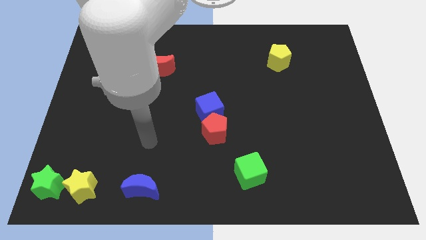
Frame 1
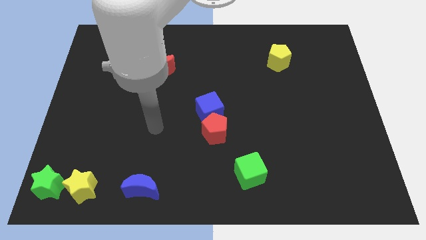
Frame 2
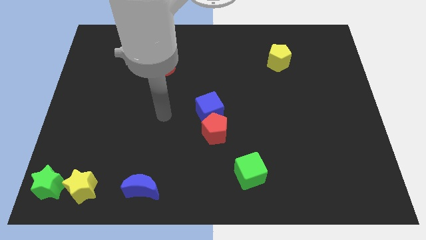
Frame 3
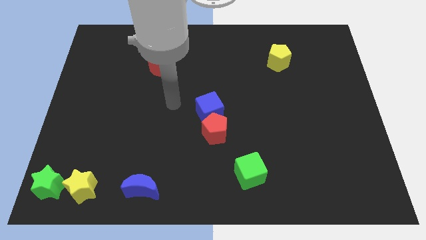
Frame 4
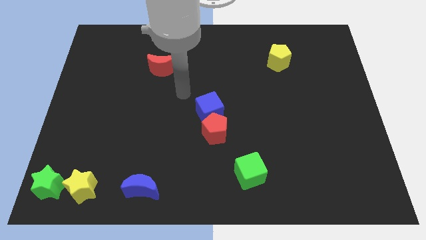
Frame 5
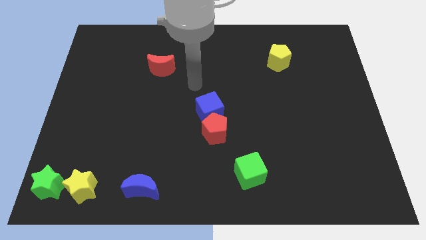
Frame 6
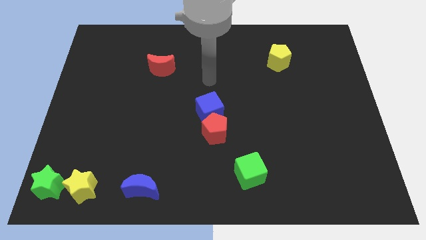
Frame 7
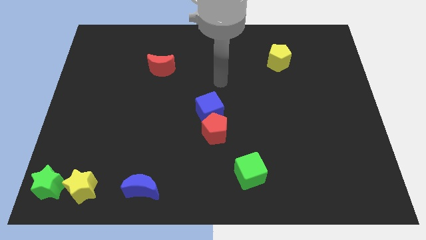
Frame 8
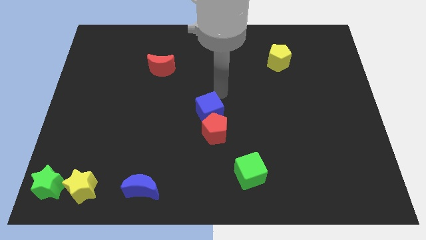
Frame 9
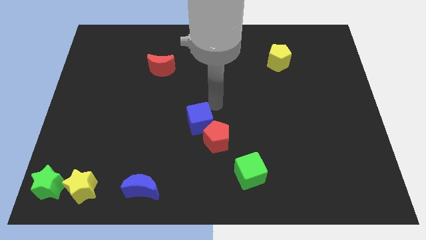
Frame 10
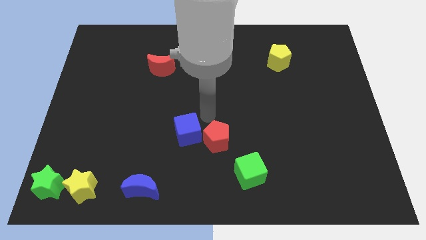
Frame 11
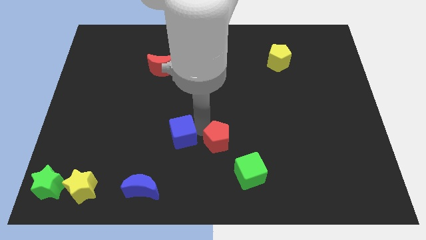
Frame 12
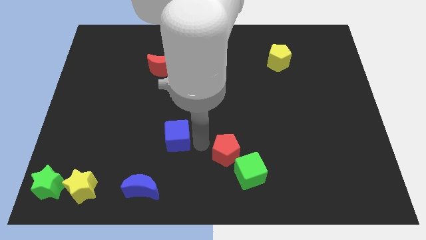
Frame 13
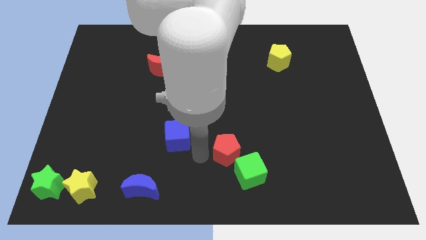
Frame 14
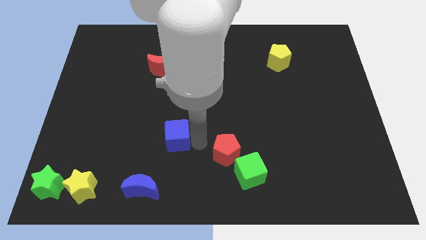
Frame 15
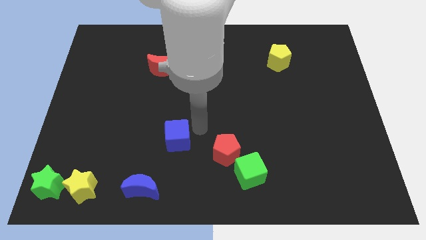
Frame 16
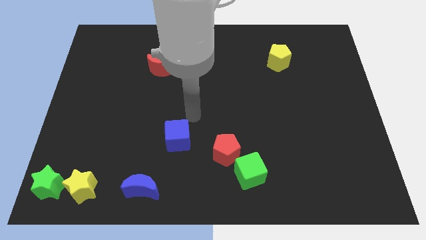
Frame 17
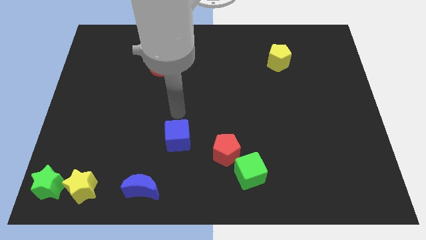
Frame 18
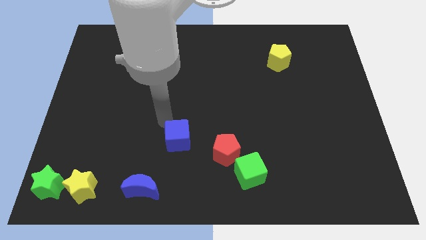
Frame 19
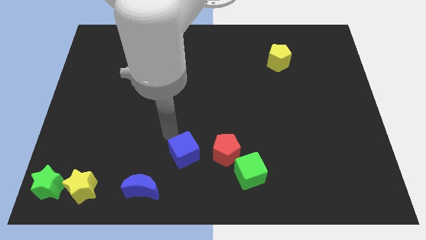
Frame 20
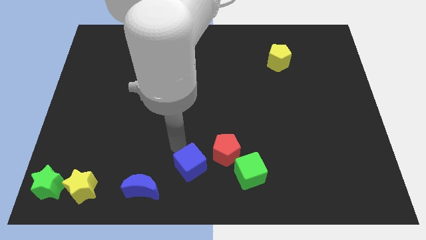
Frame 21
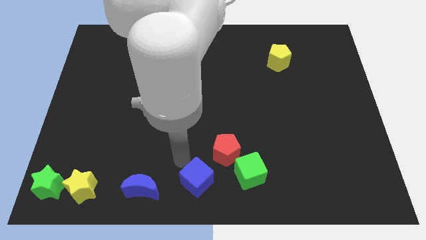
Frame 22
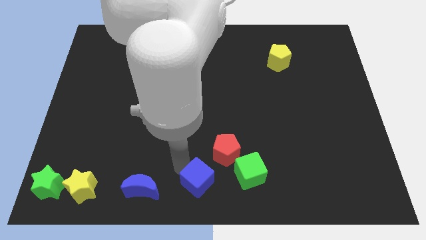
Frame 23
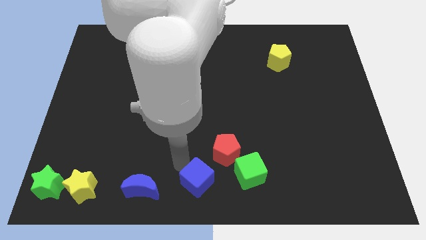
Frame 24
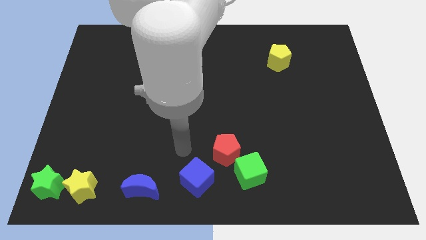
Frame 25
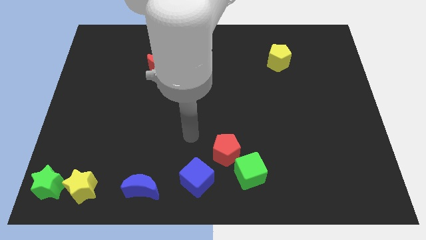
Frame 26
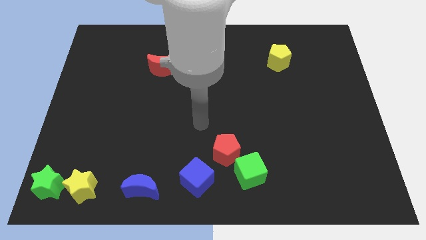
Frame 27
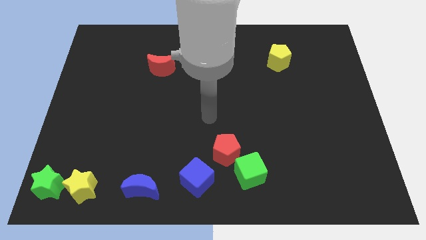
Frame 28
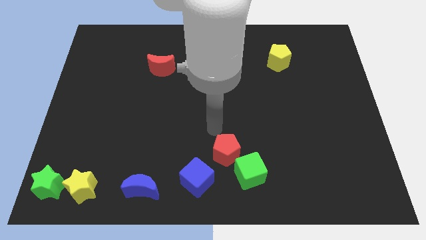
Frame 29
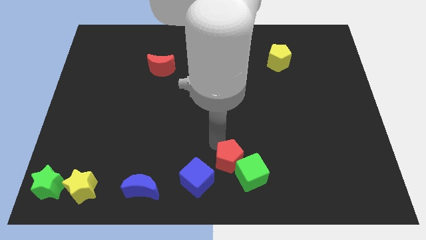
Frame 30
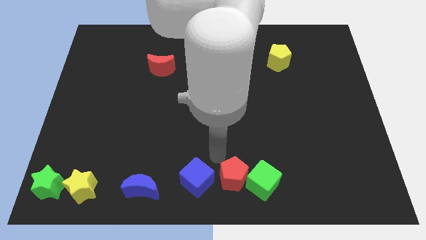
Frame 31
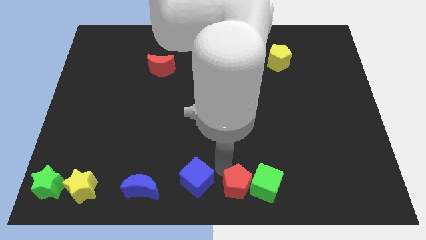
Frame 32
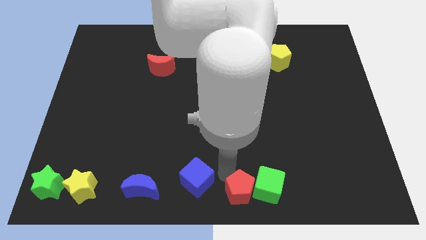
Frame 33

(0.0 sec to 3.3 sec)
separate red pentagon and the blue cube

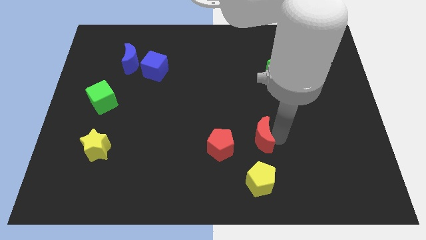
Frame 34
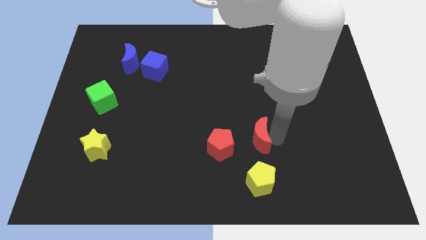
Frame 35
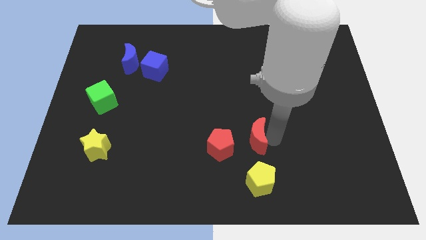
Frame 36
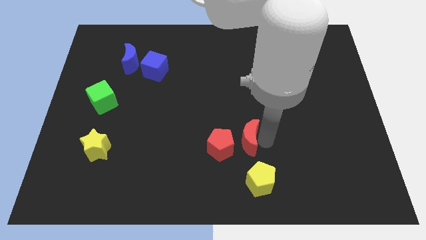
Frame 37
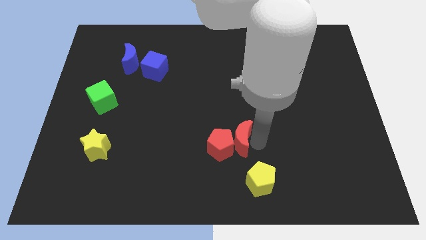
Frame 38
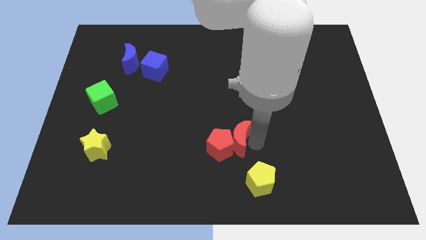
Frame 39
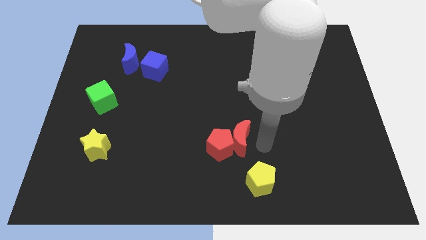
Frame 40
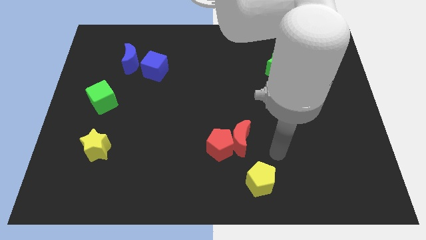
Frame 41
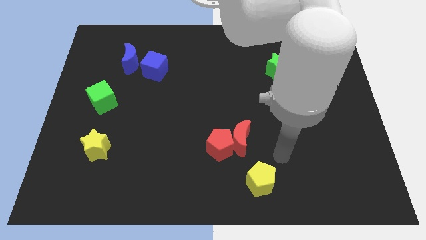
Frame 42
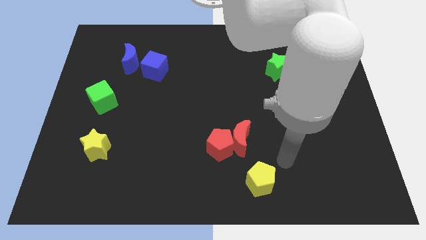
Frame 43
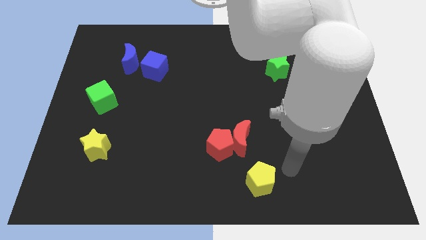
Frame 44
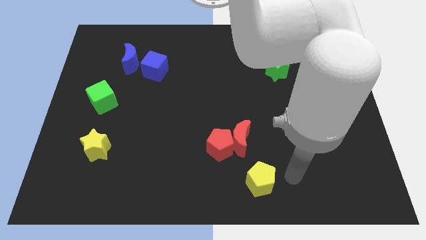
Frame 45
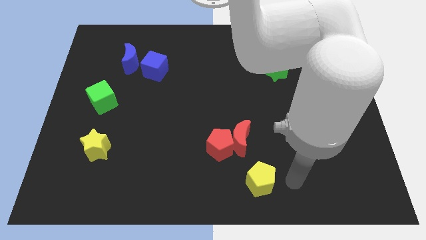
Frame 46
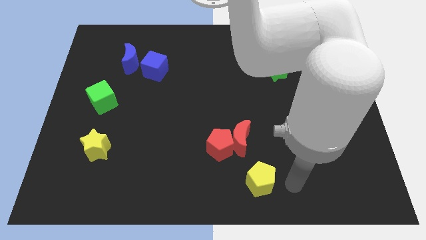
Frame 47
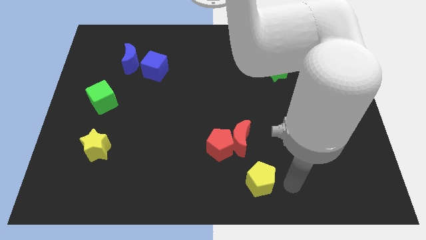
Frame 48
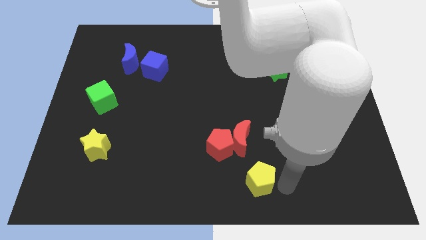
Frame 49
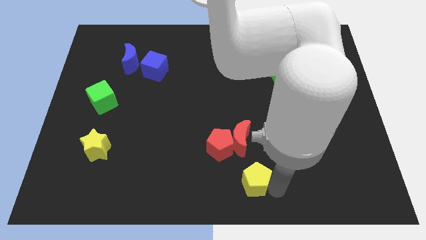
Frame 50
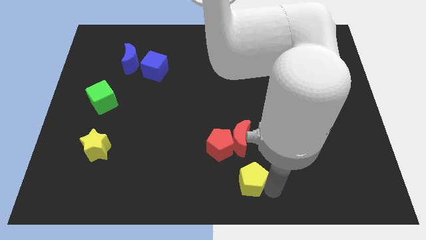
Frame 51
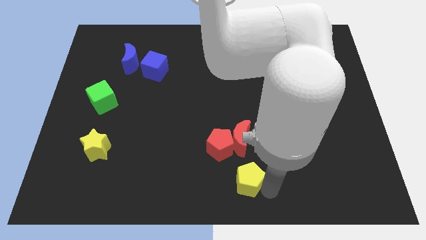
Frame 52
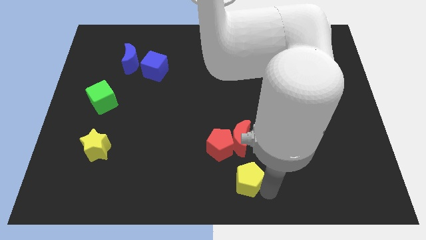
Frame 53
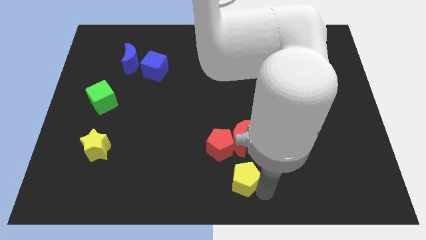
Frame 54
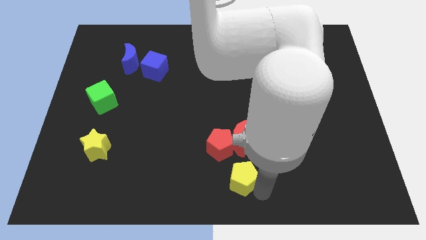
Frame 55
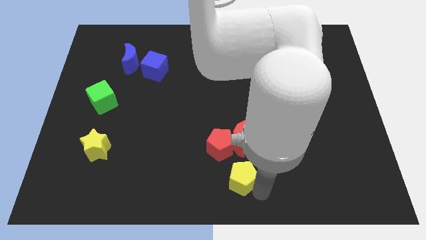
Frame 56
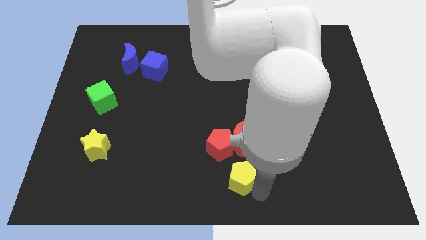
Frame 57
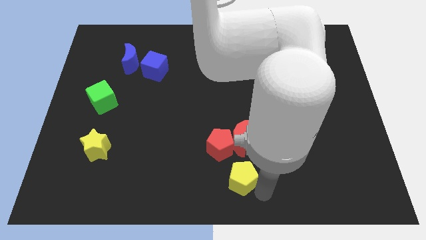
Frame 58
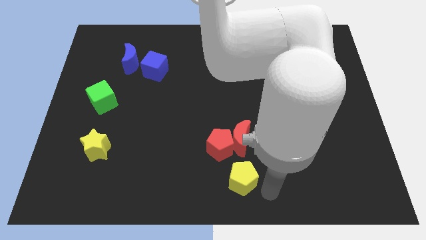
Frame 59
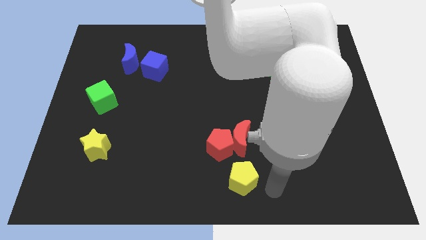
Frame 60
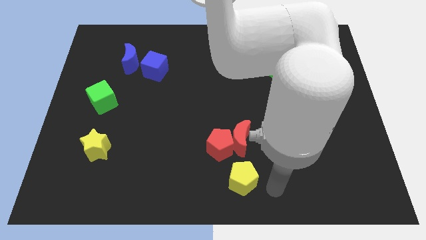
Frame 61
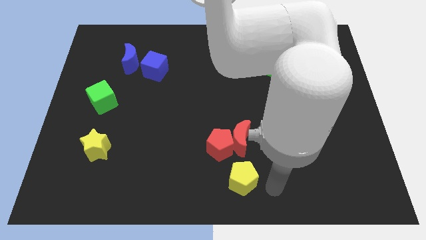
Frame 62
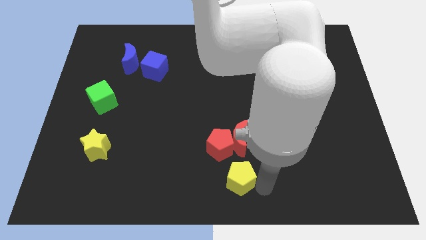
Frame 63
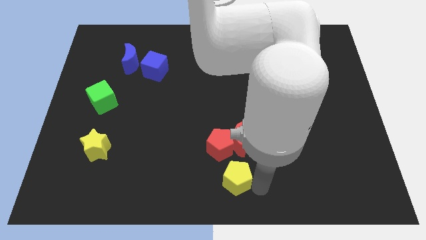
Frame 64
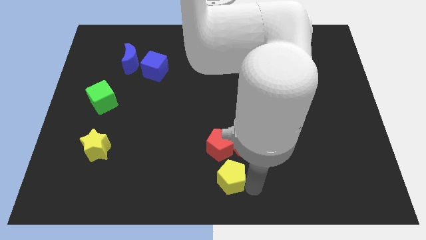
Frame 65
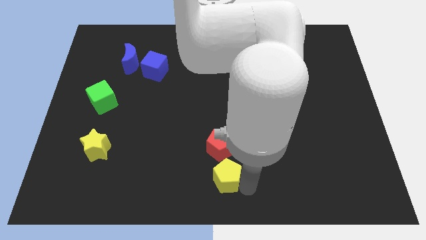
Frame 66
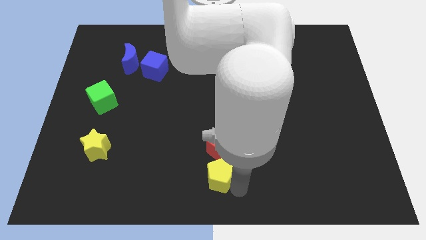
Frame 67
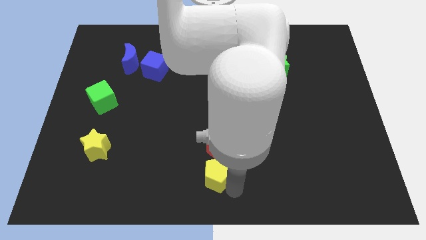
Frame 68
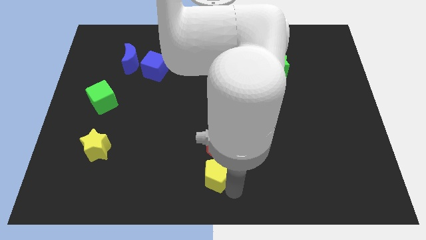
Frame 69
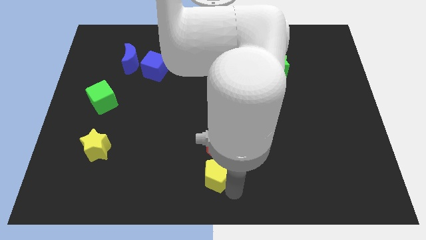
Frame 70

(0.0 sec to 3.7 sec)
place the yellow pentagon at the bottom of the red pentagon

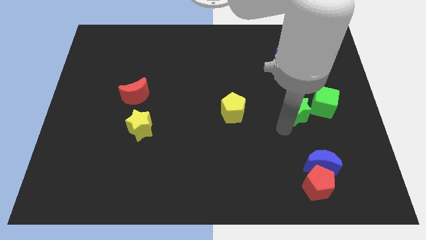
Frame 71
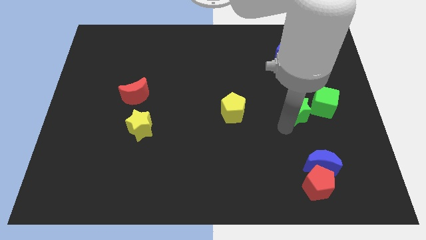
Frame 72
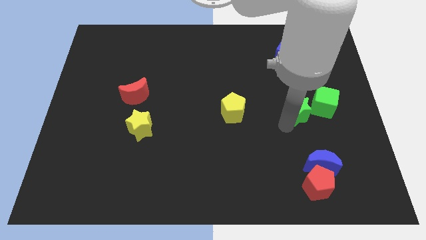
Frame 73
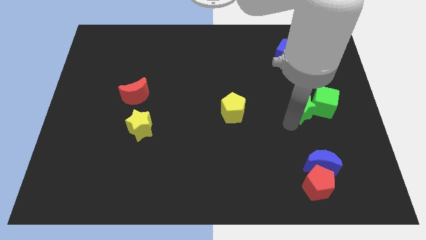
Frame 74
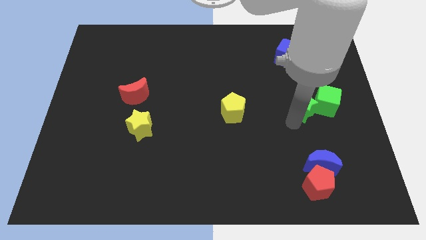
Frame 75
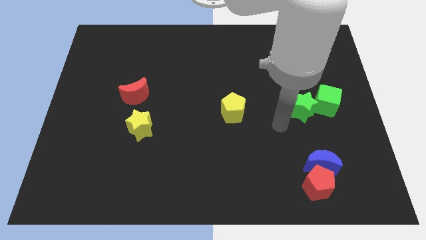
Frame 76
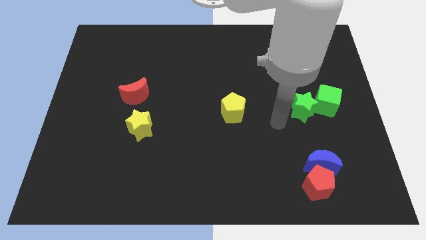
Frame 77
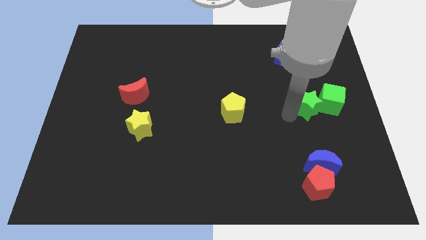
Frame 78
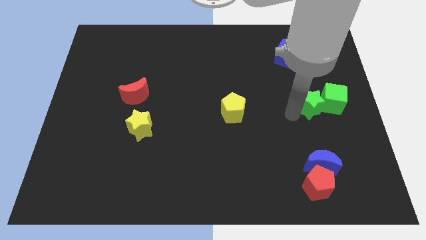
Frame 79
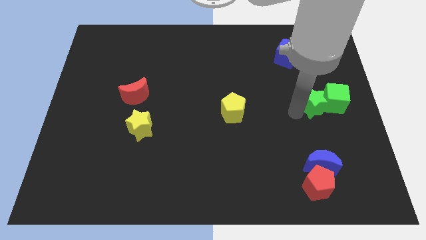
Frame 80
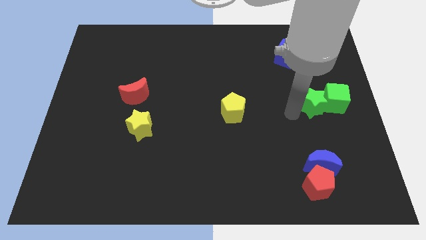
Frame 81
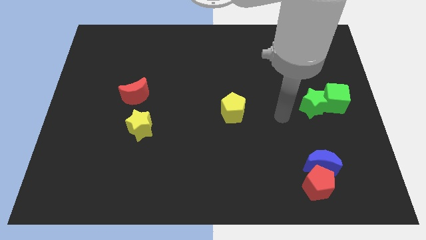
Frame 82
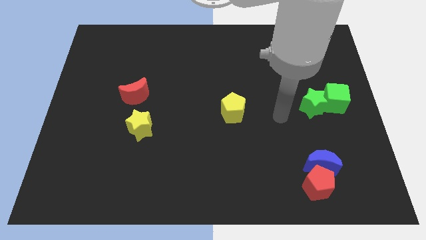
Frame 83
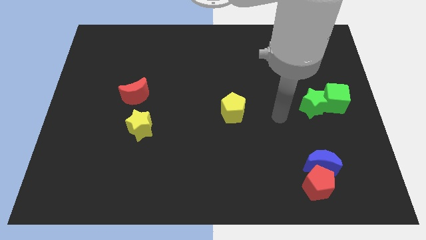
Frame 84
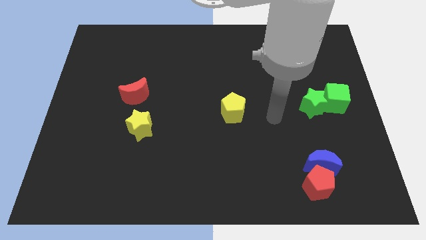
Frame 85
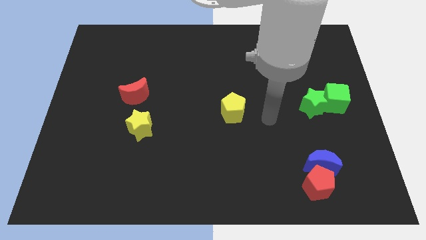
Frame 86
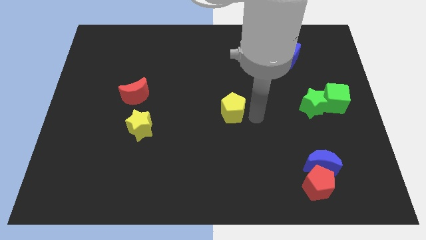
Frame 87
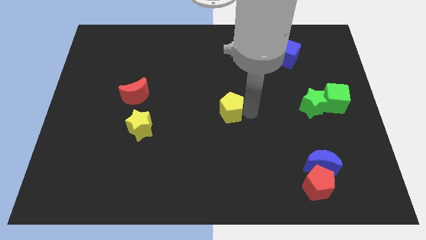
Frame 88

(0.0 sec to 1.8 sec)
push the green star into the green cube
